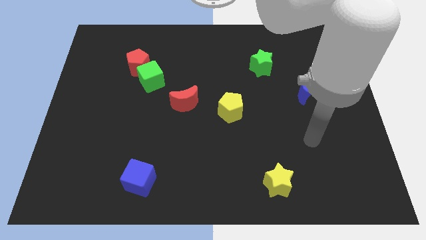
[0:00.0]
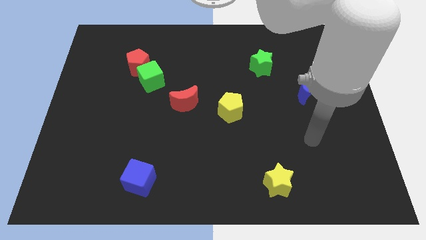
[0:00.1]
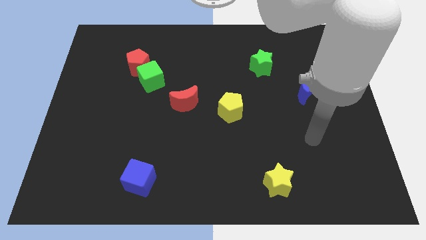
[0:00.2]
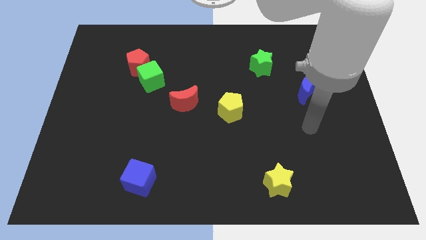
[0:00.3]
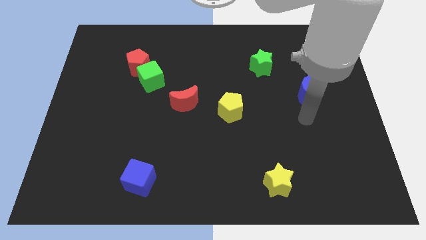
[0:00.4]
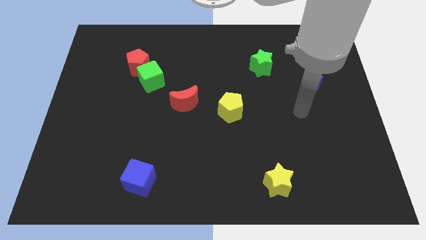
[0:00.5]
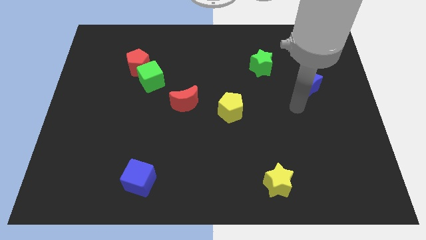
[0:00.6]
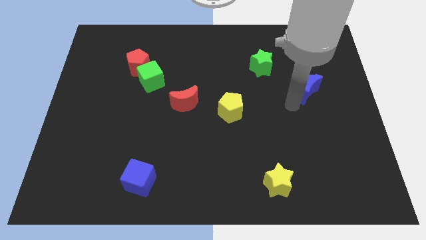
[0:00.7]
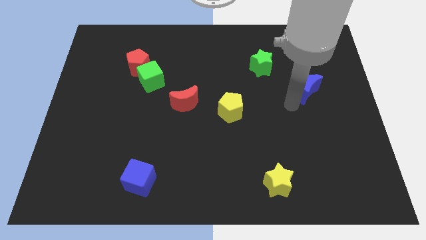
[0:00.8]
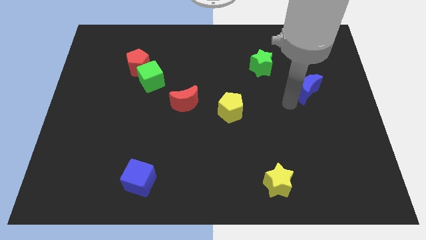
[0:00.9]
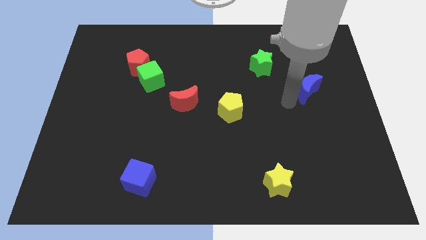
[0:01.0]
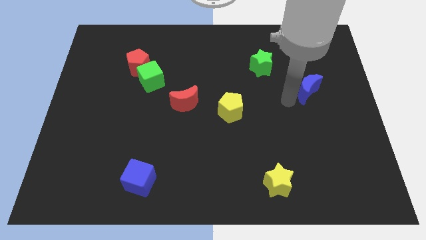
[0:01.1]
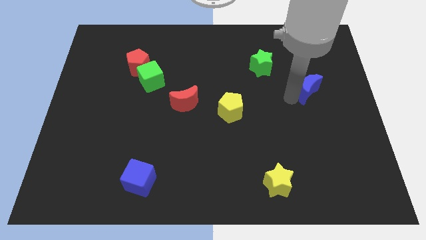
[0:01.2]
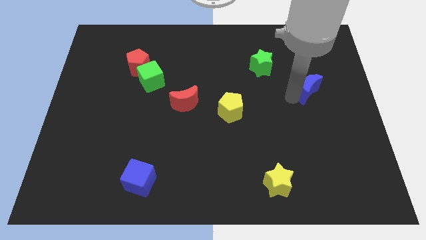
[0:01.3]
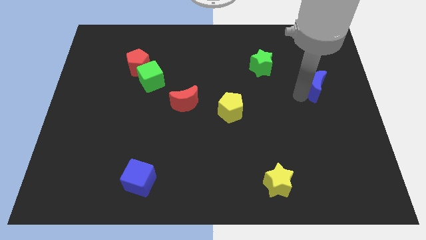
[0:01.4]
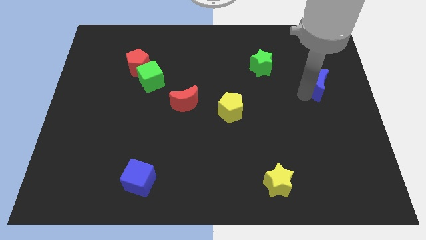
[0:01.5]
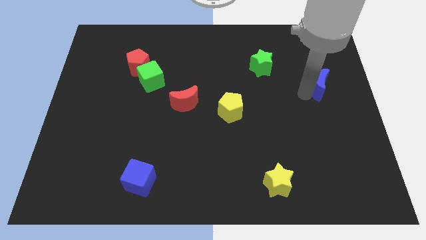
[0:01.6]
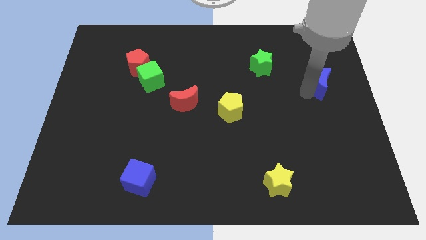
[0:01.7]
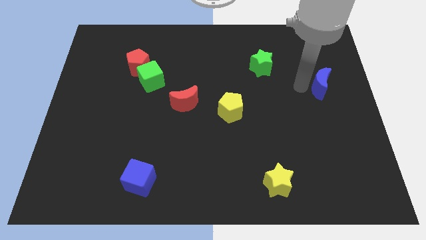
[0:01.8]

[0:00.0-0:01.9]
slightly push the blue moon to the right

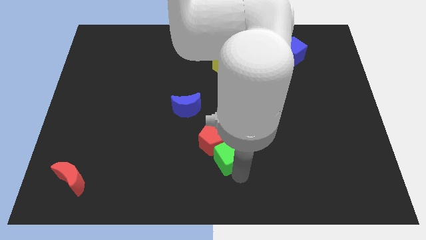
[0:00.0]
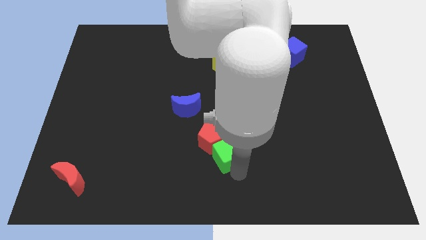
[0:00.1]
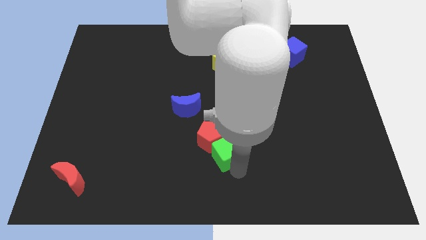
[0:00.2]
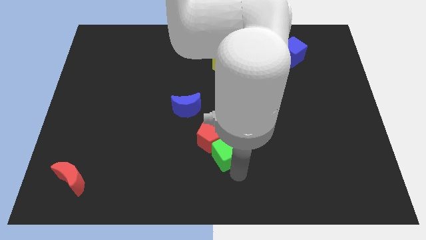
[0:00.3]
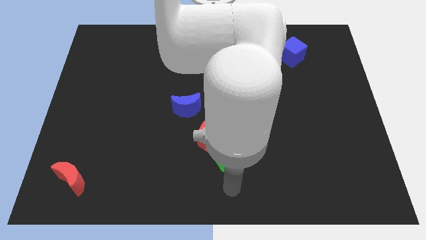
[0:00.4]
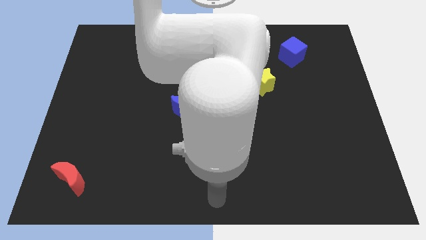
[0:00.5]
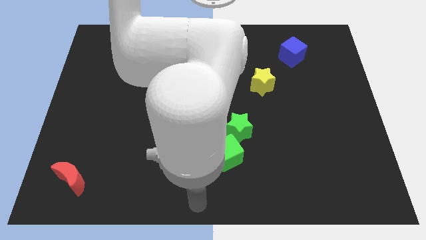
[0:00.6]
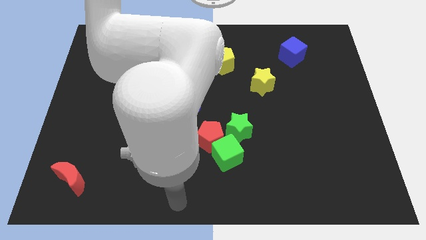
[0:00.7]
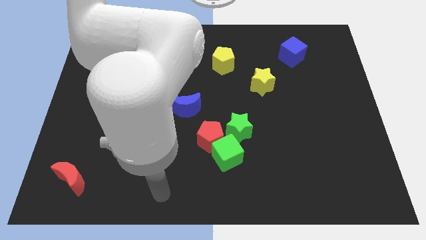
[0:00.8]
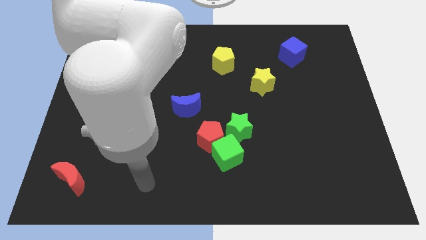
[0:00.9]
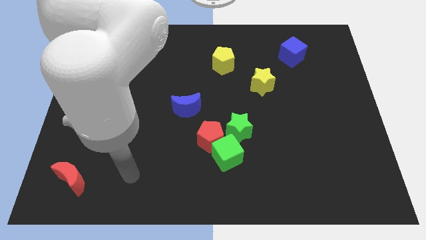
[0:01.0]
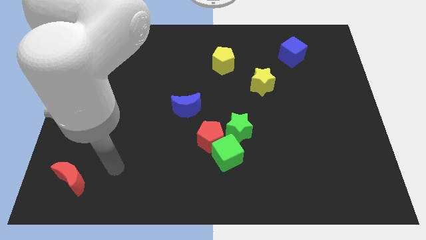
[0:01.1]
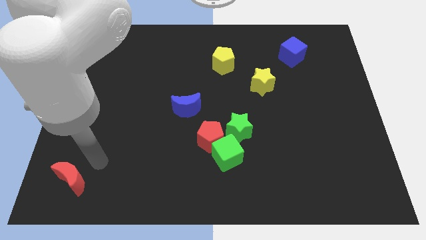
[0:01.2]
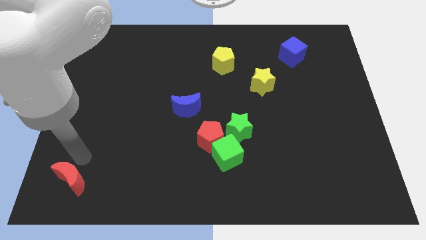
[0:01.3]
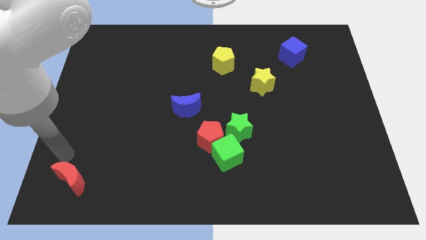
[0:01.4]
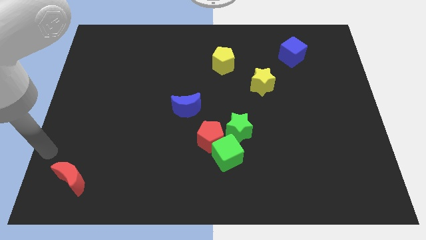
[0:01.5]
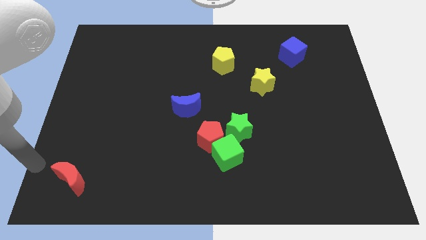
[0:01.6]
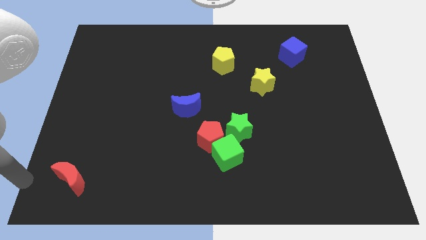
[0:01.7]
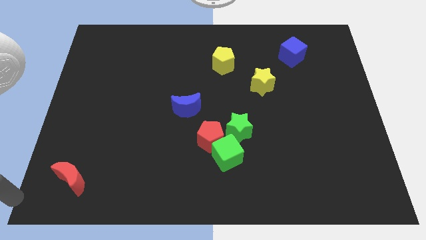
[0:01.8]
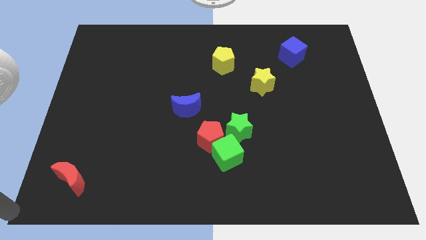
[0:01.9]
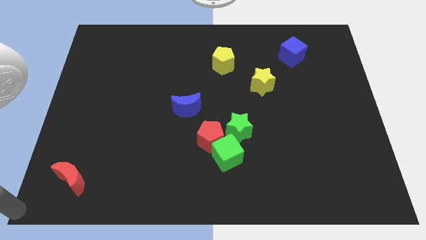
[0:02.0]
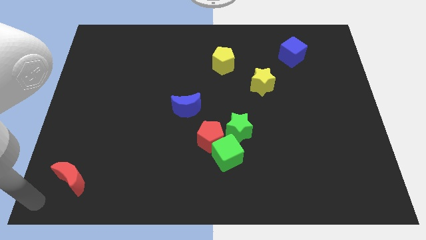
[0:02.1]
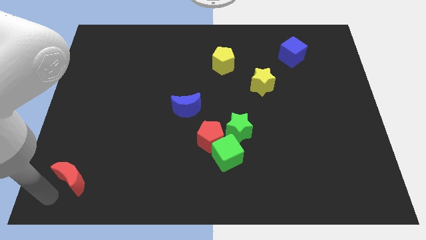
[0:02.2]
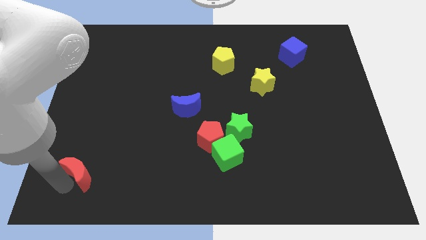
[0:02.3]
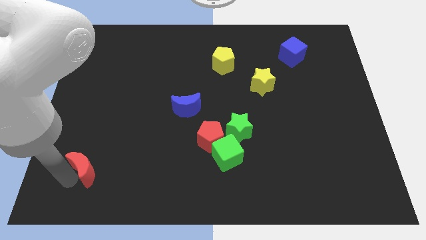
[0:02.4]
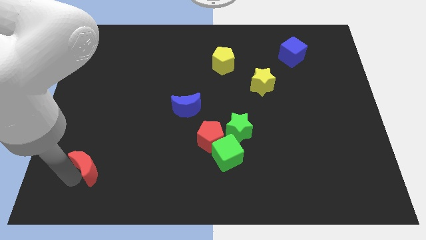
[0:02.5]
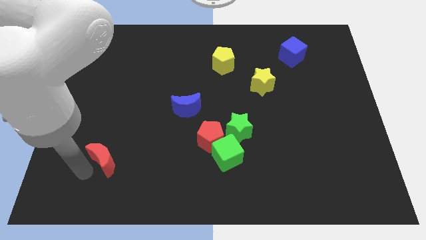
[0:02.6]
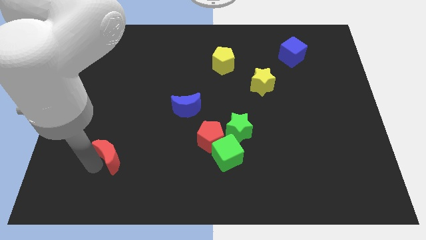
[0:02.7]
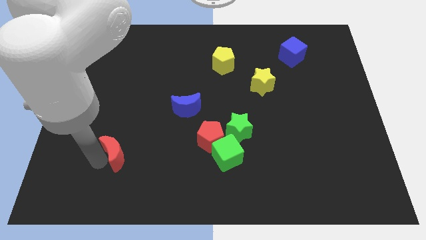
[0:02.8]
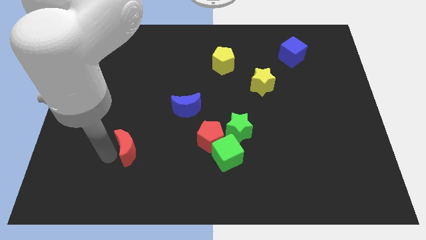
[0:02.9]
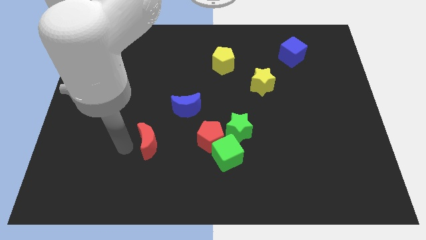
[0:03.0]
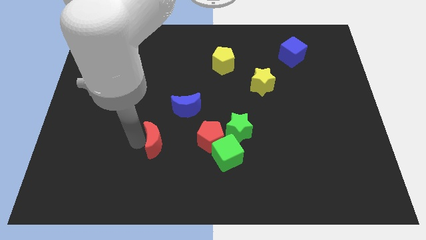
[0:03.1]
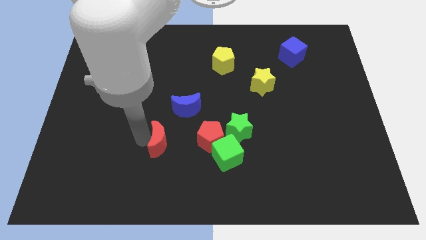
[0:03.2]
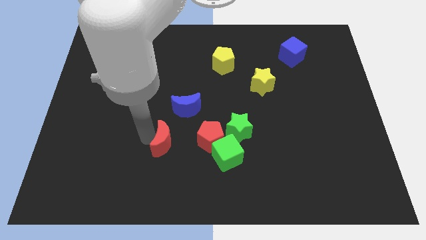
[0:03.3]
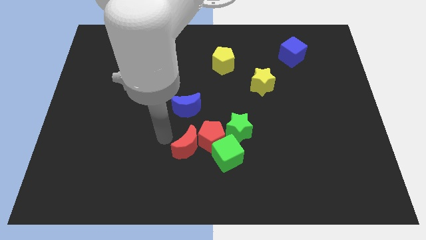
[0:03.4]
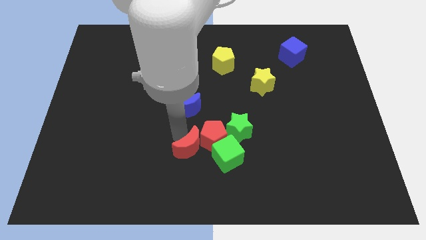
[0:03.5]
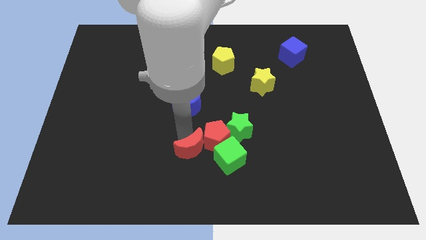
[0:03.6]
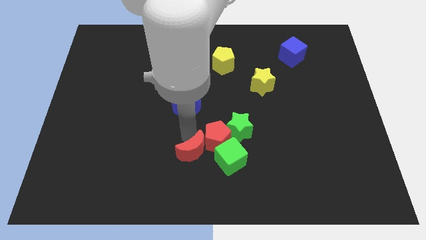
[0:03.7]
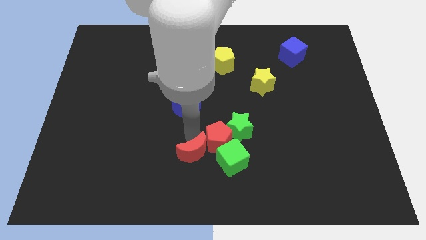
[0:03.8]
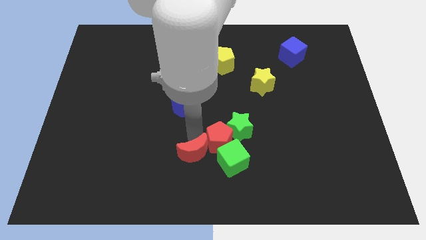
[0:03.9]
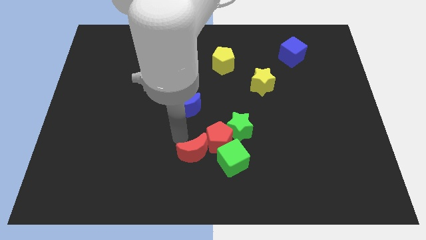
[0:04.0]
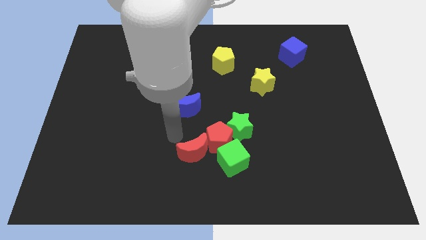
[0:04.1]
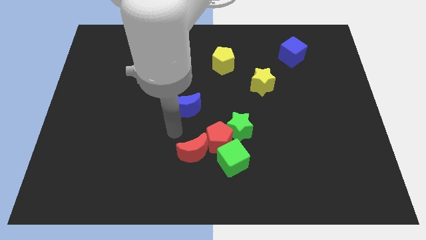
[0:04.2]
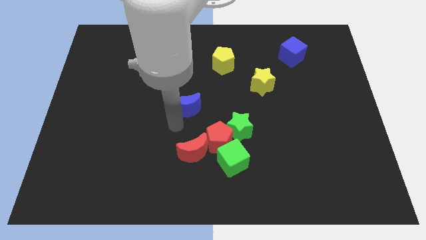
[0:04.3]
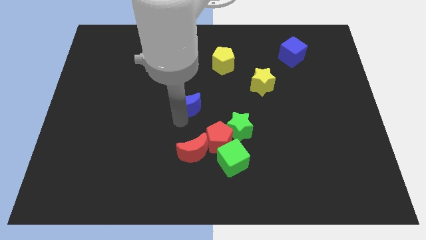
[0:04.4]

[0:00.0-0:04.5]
slide the red moon to touch the left side of the red pentagon

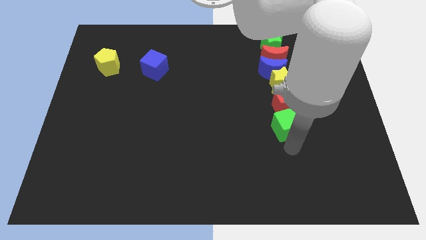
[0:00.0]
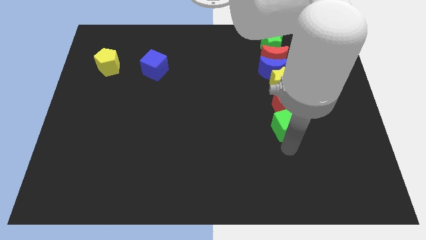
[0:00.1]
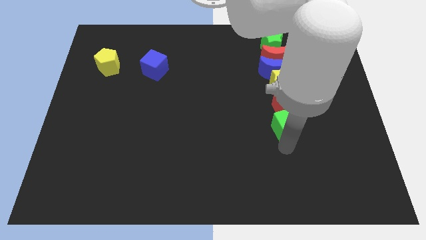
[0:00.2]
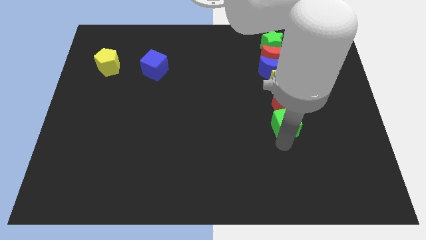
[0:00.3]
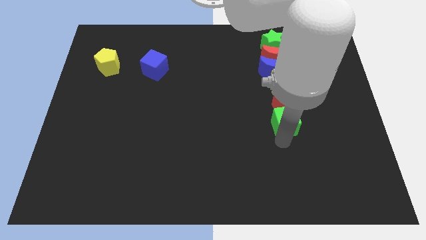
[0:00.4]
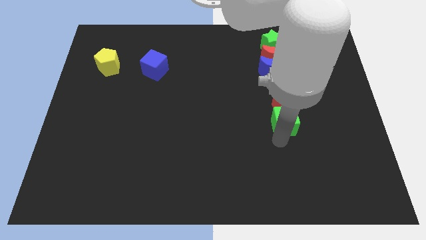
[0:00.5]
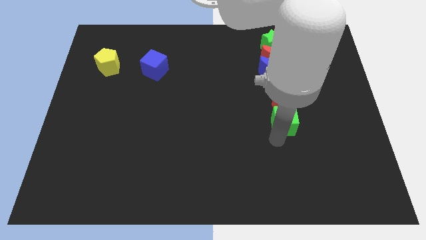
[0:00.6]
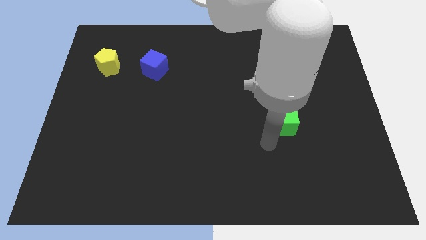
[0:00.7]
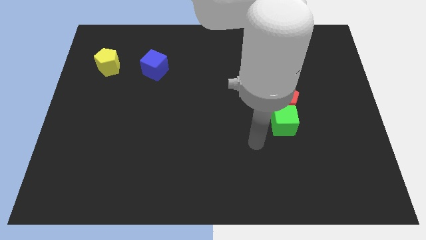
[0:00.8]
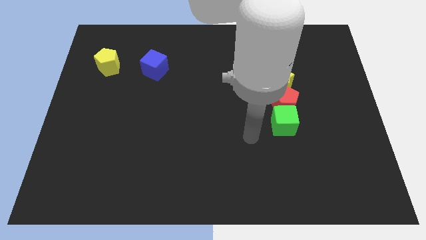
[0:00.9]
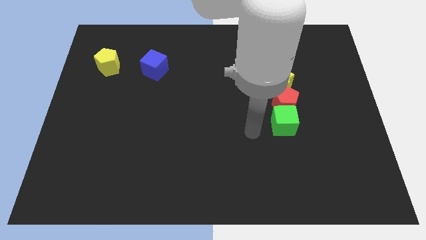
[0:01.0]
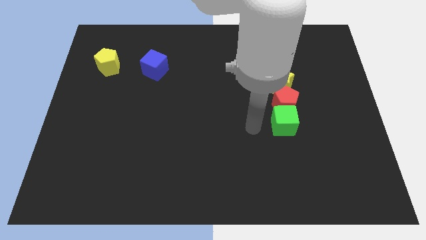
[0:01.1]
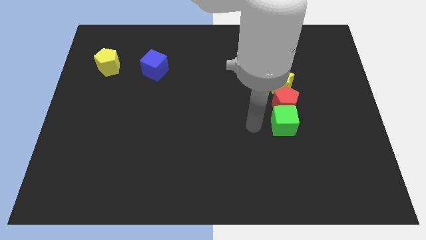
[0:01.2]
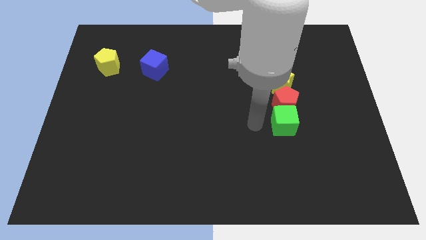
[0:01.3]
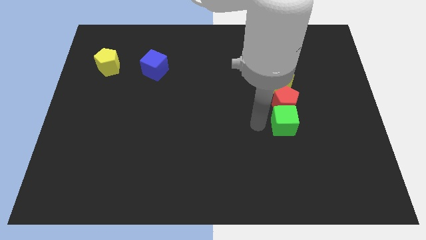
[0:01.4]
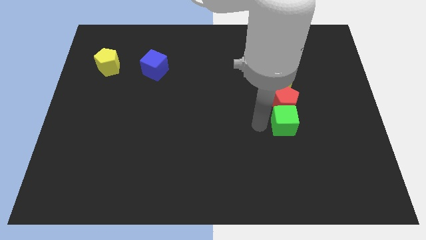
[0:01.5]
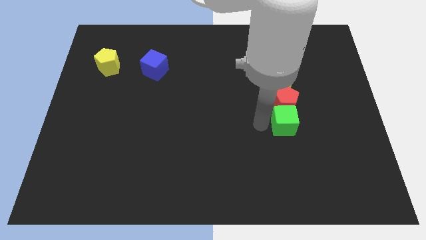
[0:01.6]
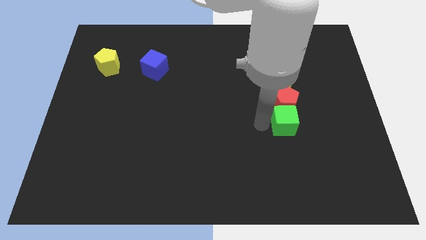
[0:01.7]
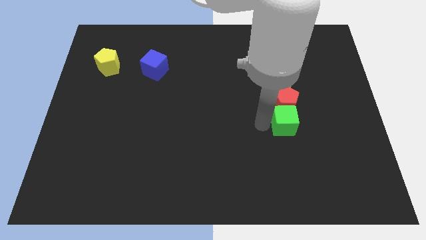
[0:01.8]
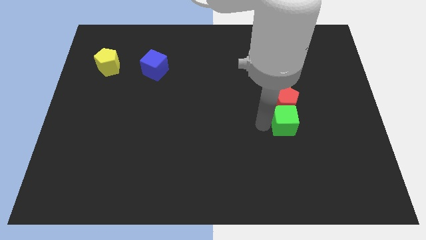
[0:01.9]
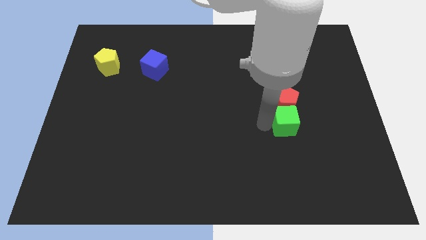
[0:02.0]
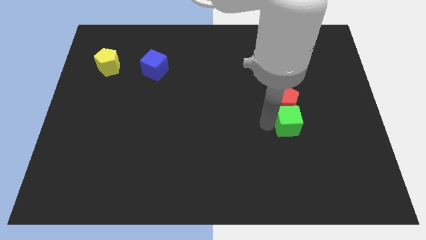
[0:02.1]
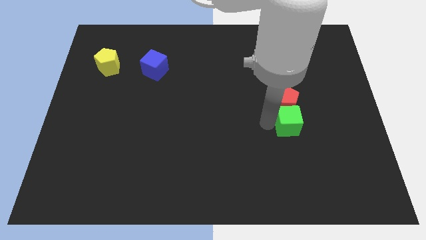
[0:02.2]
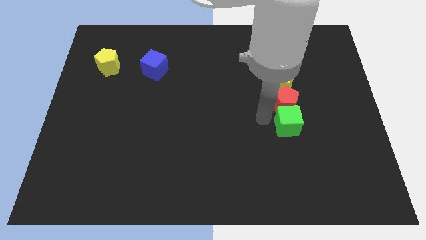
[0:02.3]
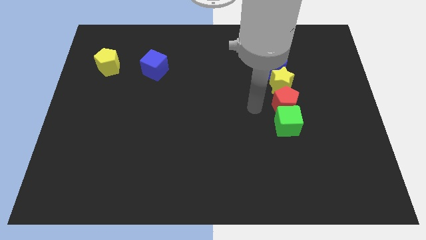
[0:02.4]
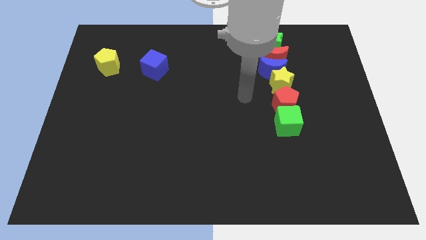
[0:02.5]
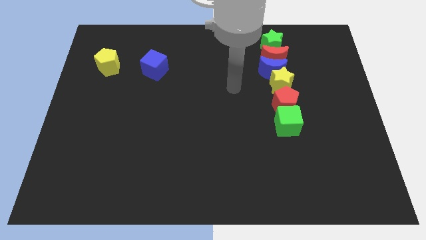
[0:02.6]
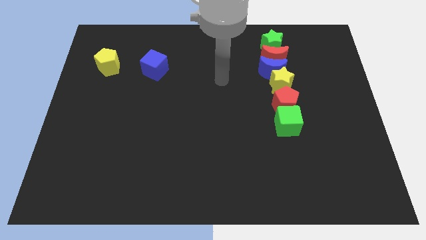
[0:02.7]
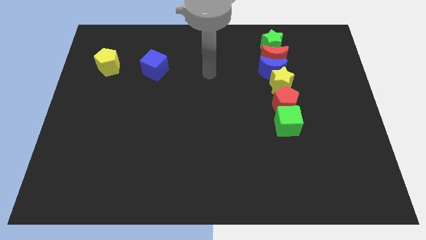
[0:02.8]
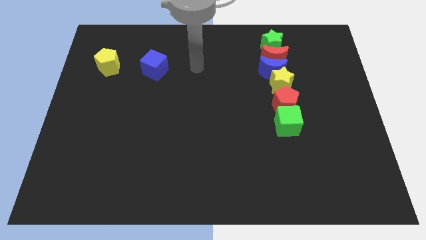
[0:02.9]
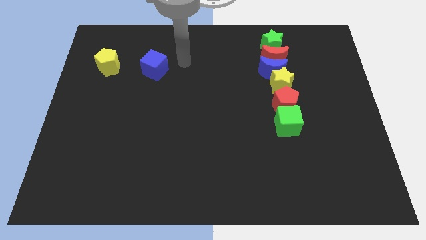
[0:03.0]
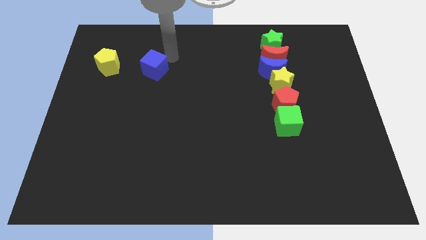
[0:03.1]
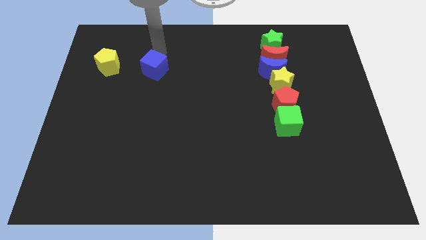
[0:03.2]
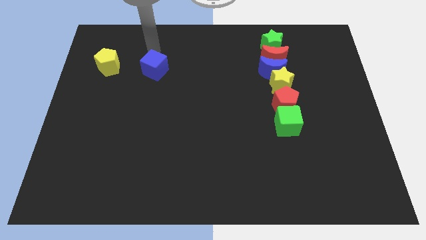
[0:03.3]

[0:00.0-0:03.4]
move your arm away from the green cube
